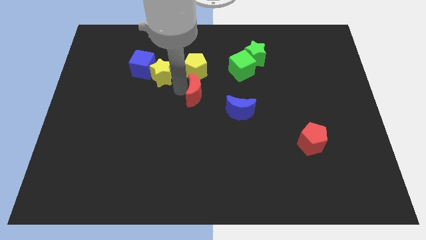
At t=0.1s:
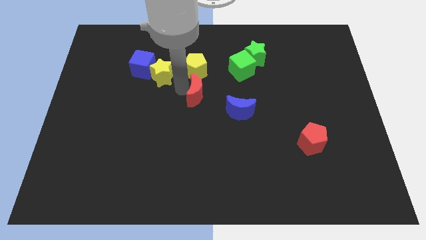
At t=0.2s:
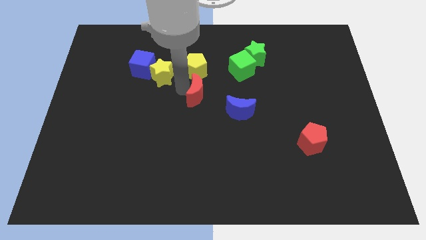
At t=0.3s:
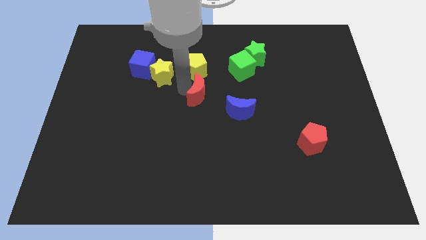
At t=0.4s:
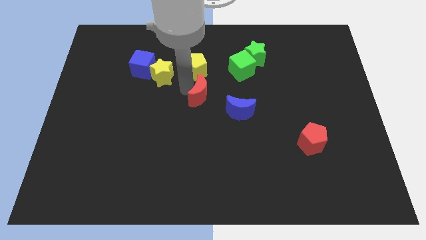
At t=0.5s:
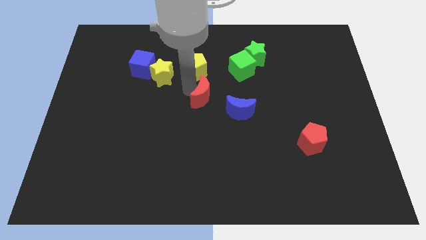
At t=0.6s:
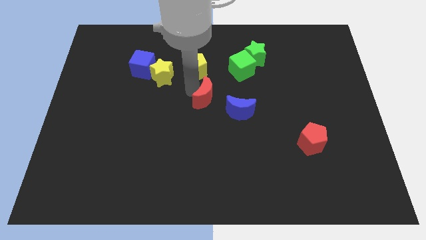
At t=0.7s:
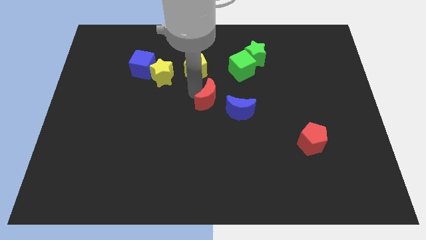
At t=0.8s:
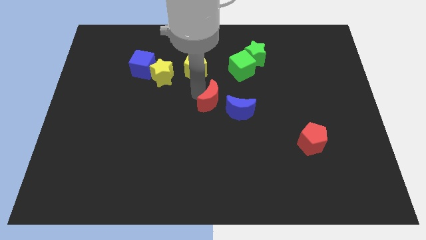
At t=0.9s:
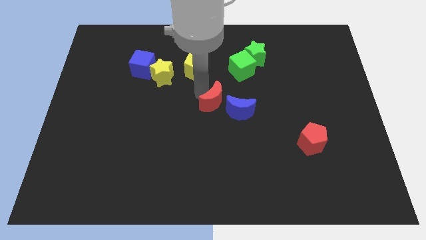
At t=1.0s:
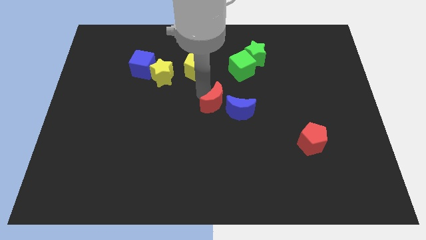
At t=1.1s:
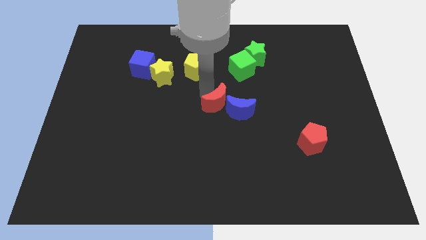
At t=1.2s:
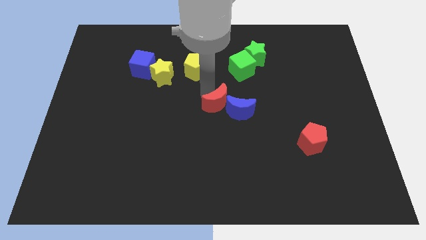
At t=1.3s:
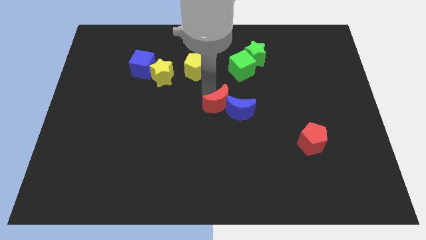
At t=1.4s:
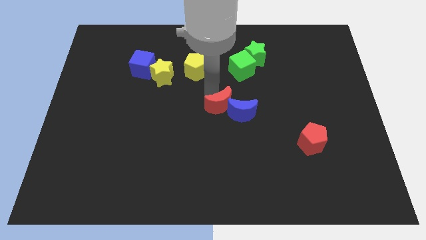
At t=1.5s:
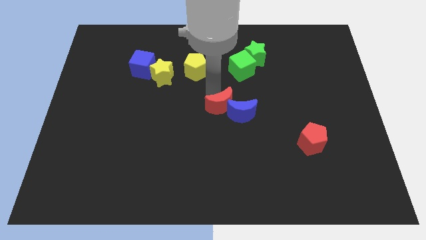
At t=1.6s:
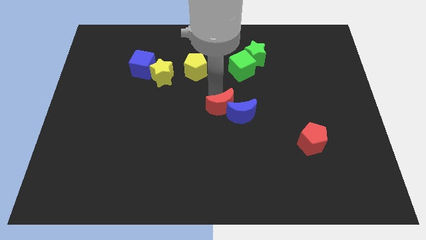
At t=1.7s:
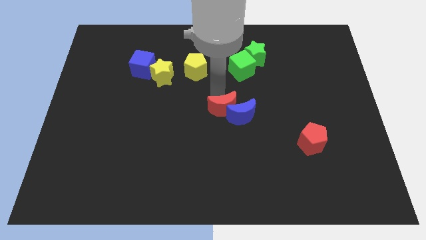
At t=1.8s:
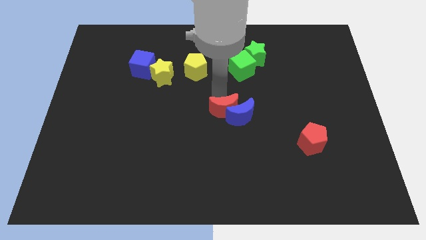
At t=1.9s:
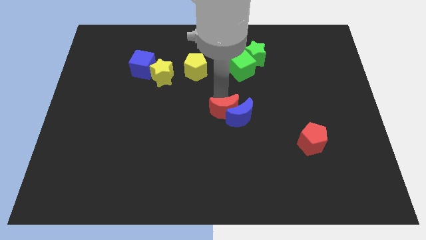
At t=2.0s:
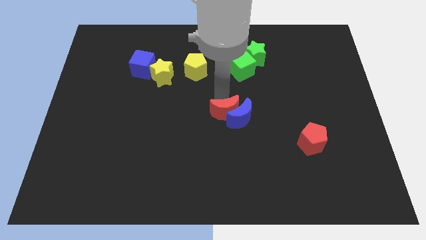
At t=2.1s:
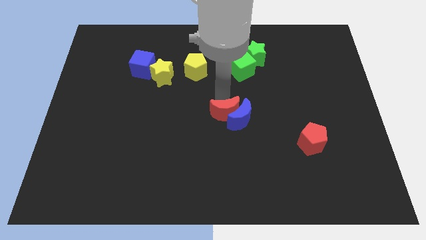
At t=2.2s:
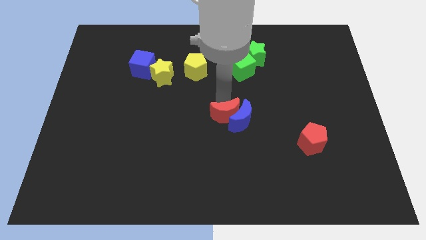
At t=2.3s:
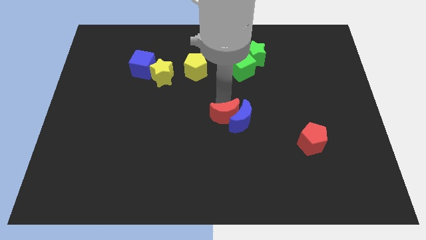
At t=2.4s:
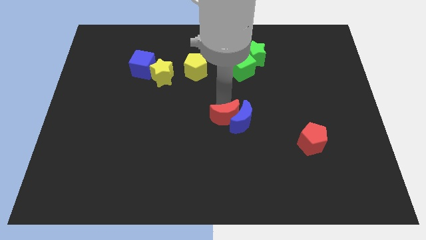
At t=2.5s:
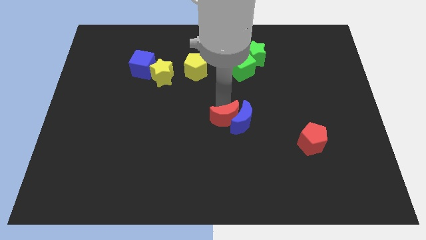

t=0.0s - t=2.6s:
slightly push the blue crescent towards the bottom side with red moon

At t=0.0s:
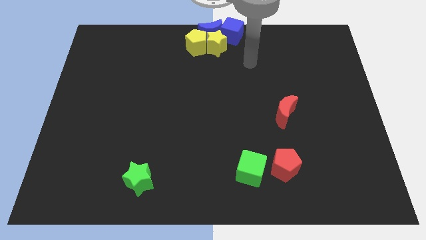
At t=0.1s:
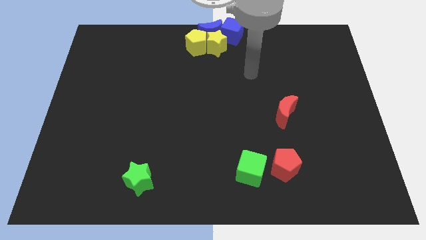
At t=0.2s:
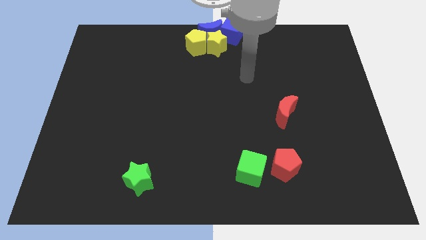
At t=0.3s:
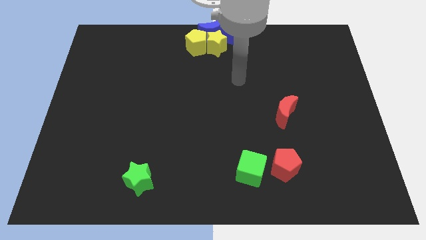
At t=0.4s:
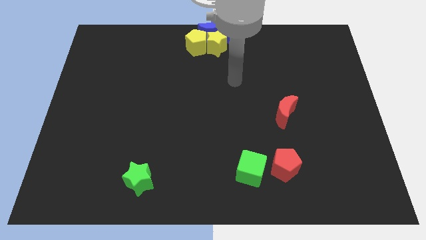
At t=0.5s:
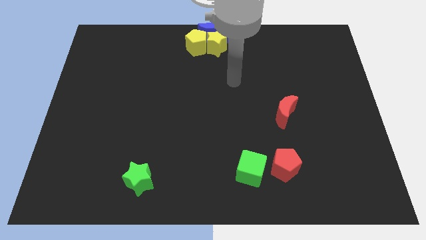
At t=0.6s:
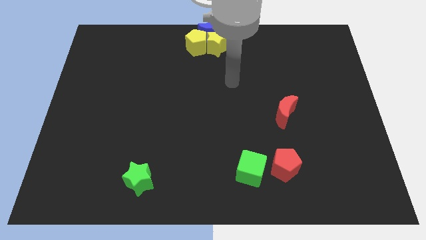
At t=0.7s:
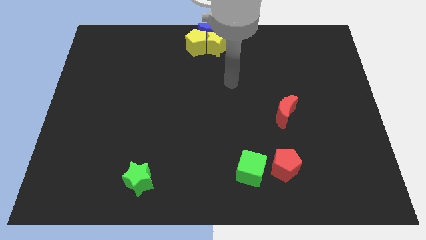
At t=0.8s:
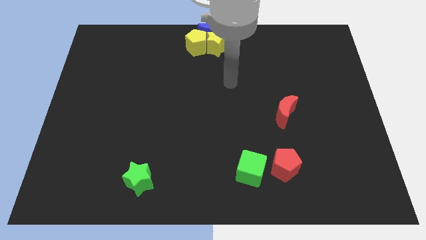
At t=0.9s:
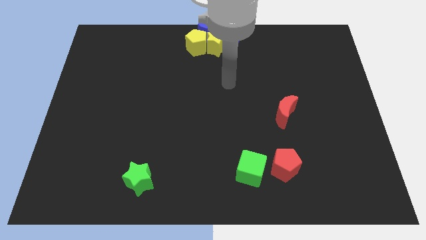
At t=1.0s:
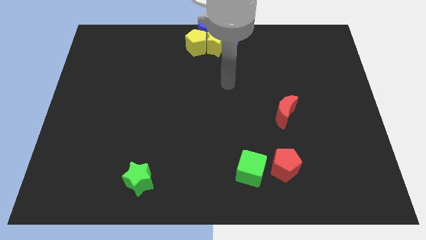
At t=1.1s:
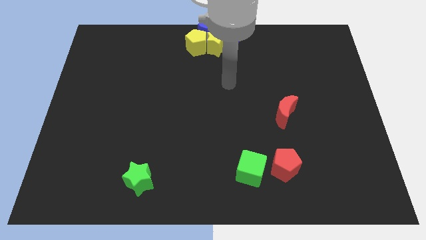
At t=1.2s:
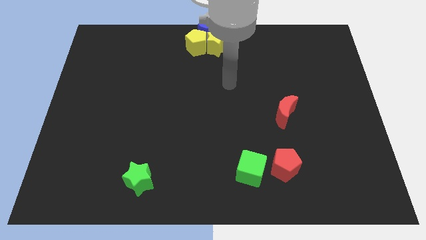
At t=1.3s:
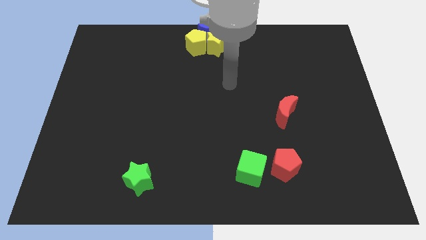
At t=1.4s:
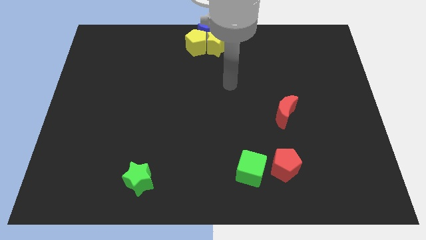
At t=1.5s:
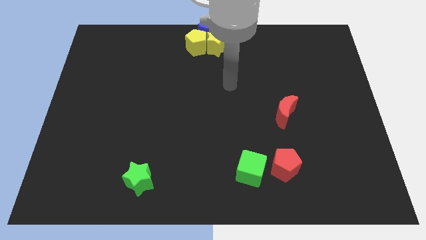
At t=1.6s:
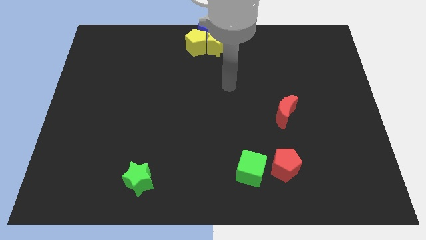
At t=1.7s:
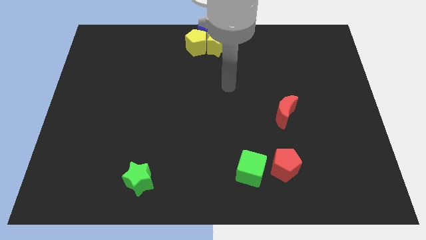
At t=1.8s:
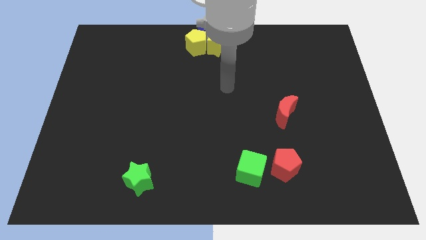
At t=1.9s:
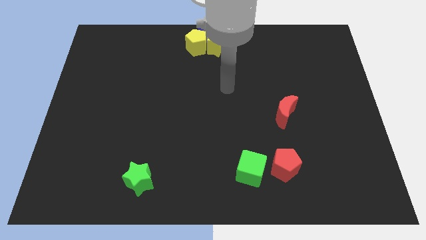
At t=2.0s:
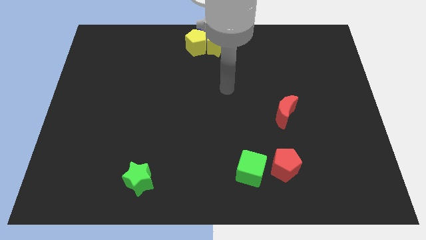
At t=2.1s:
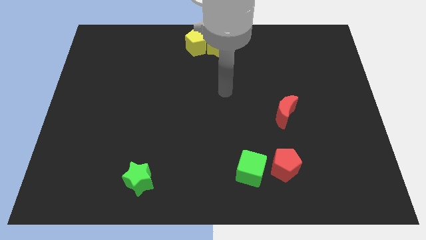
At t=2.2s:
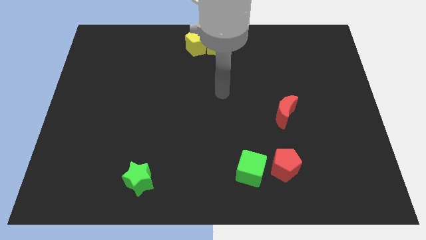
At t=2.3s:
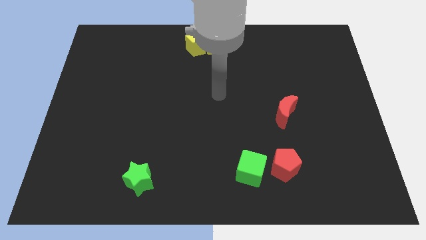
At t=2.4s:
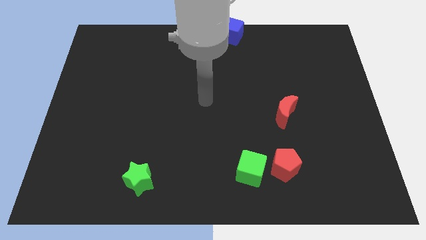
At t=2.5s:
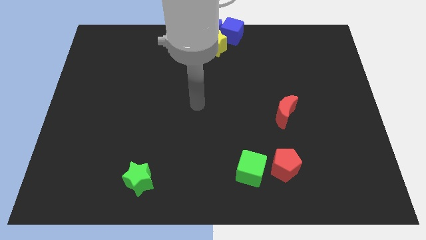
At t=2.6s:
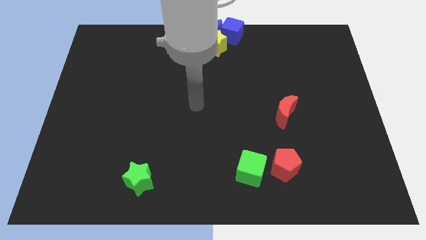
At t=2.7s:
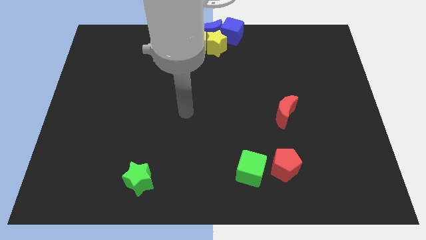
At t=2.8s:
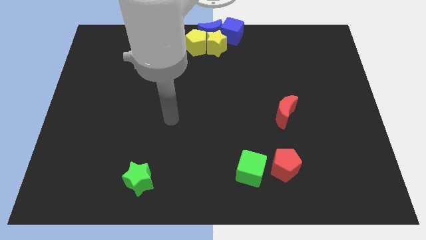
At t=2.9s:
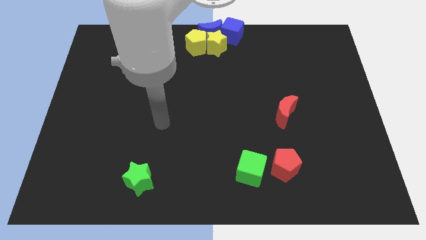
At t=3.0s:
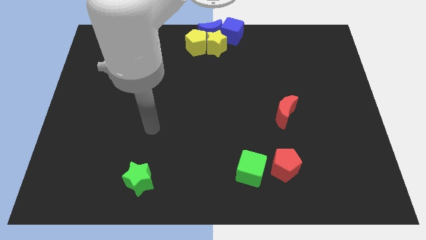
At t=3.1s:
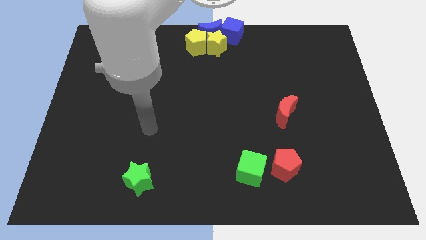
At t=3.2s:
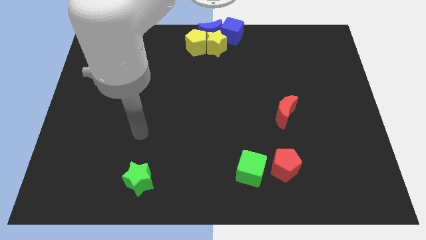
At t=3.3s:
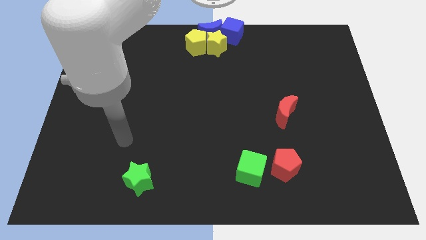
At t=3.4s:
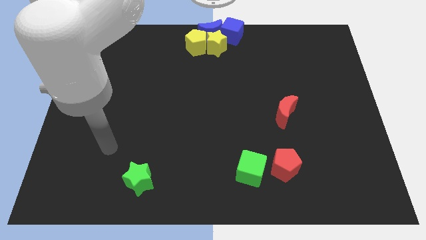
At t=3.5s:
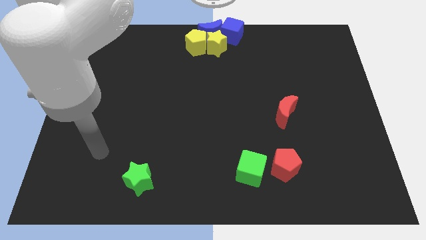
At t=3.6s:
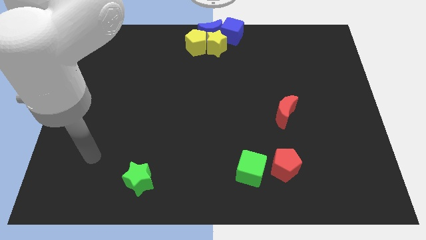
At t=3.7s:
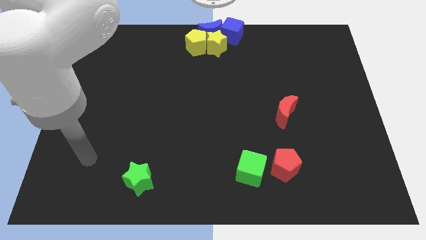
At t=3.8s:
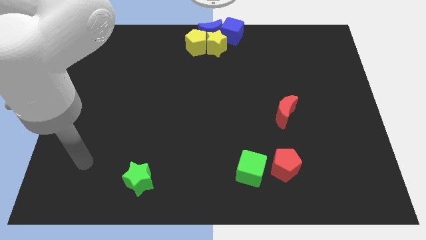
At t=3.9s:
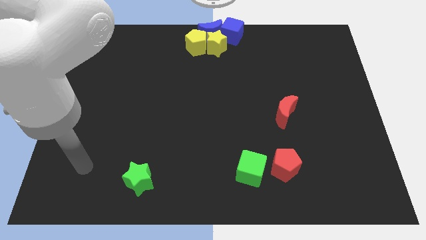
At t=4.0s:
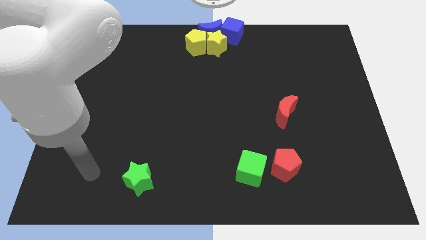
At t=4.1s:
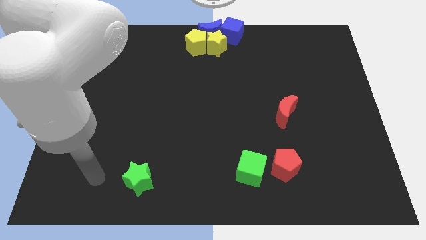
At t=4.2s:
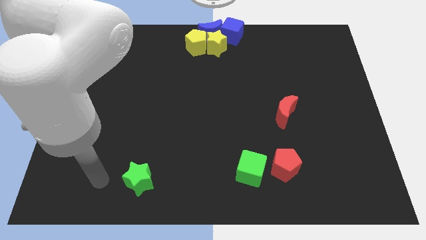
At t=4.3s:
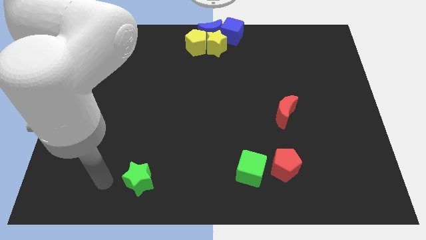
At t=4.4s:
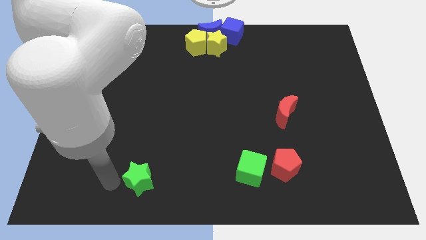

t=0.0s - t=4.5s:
place the arm left to the green star

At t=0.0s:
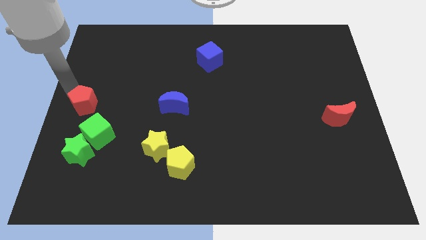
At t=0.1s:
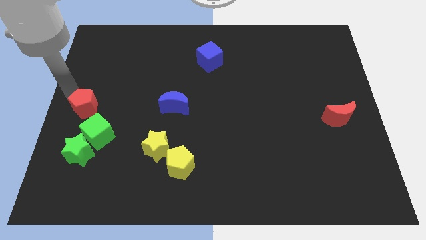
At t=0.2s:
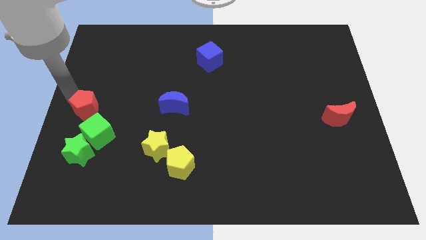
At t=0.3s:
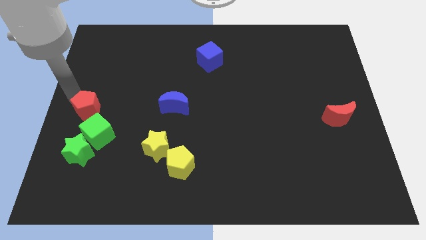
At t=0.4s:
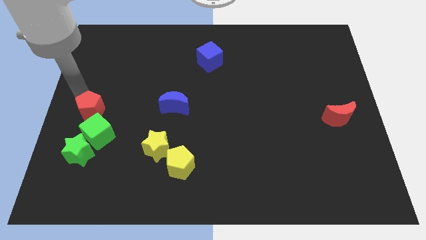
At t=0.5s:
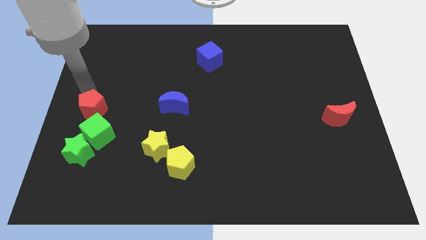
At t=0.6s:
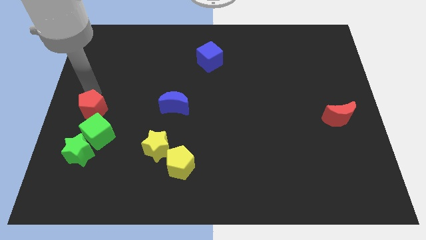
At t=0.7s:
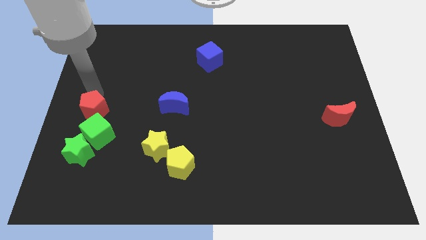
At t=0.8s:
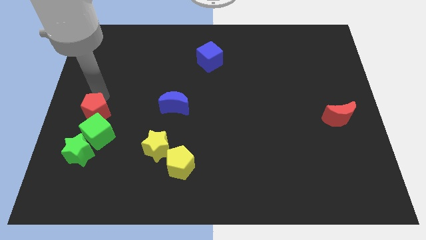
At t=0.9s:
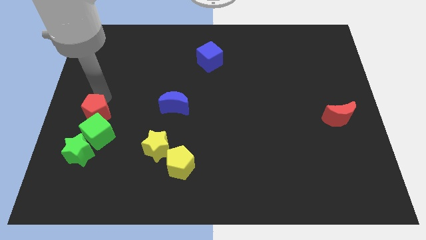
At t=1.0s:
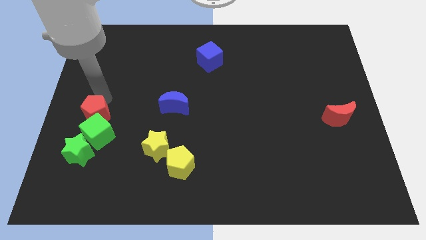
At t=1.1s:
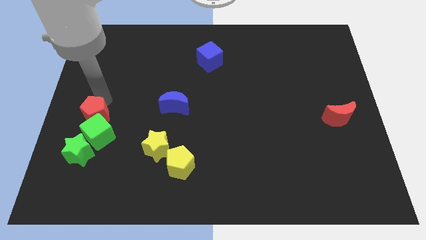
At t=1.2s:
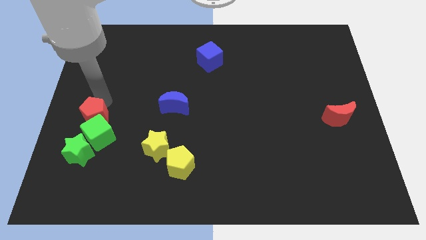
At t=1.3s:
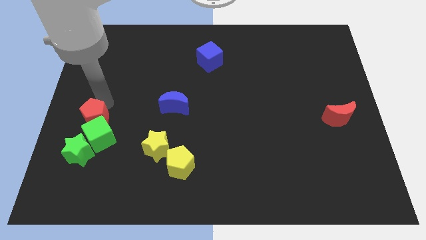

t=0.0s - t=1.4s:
push the red pentagon into the top of the green cube

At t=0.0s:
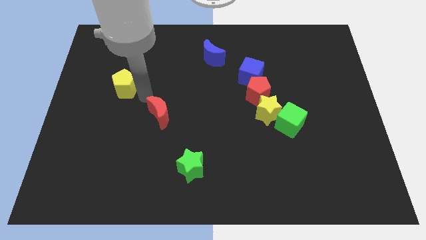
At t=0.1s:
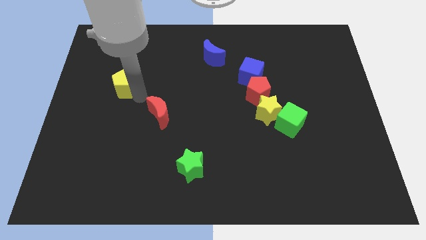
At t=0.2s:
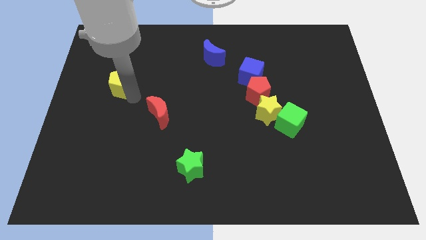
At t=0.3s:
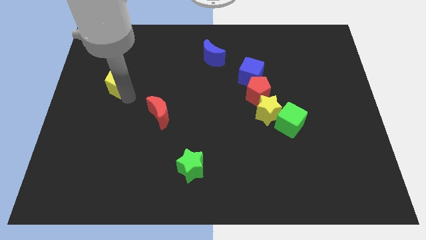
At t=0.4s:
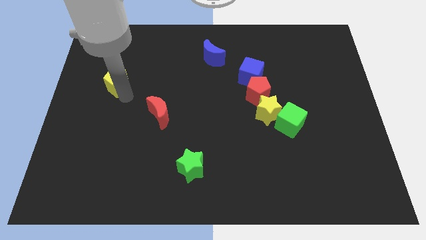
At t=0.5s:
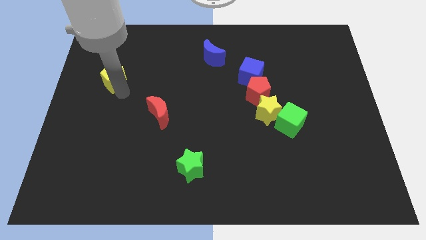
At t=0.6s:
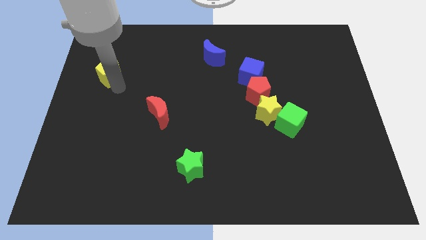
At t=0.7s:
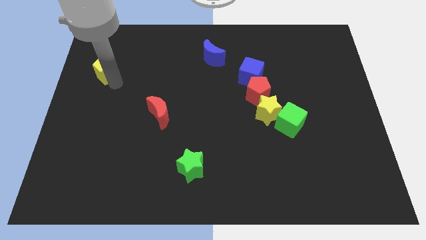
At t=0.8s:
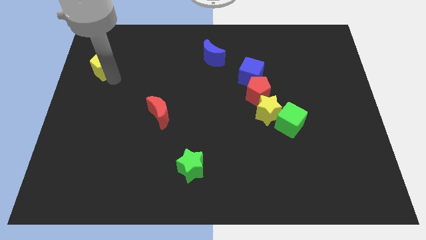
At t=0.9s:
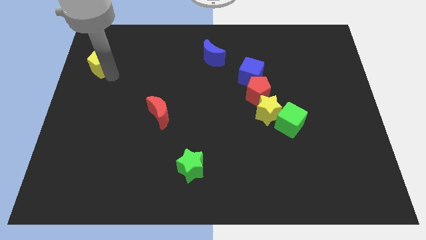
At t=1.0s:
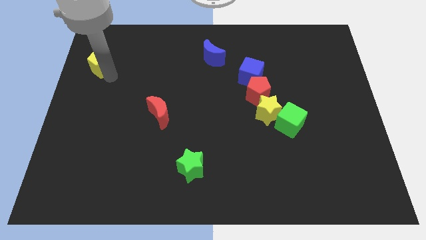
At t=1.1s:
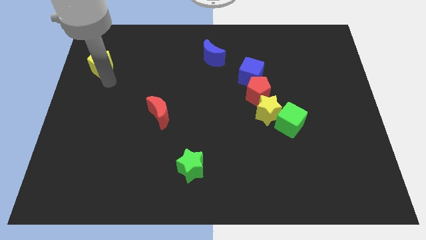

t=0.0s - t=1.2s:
push the yellow pentagon towards the top left corner of the board
